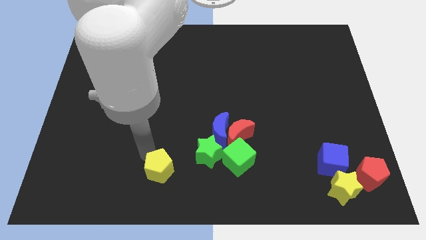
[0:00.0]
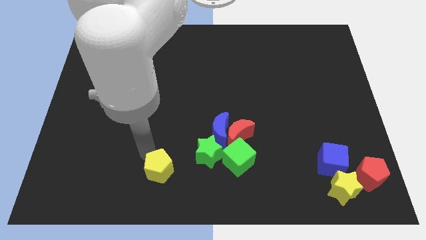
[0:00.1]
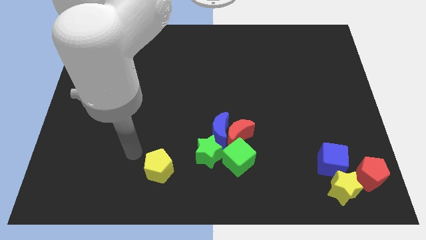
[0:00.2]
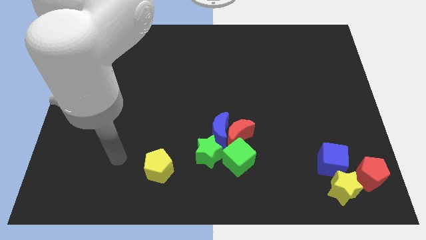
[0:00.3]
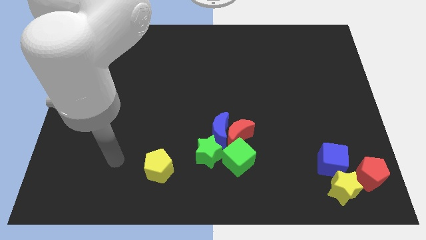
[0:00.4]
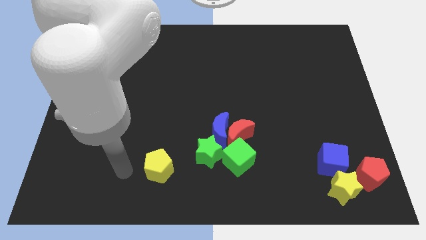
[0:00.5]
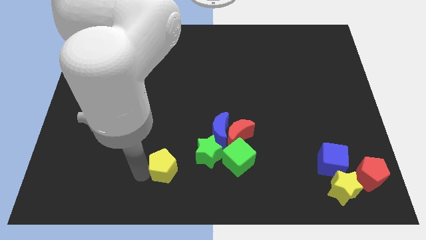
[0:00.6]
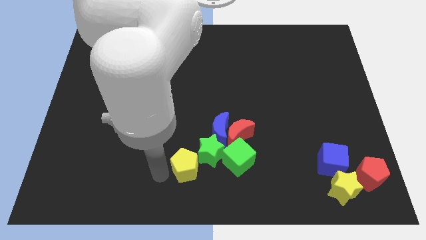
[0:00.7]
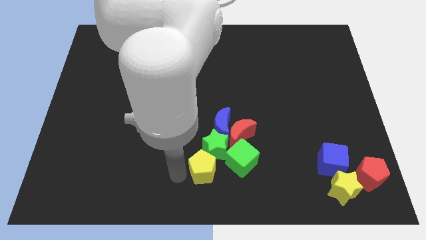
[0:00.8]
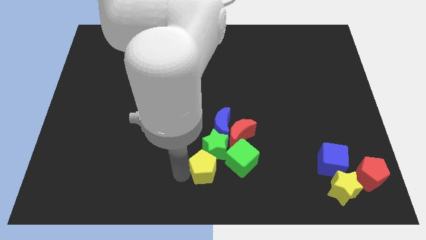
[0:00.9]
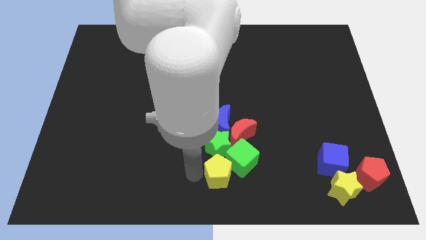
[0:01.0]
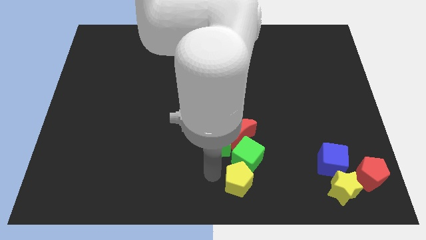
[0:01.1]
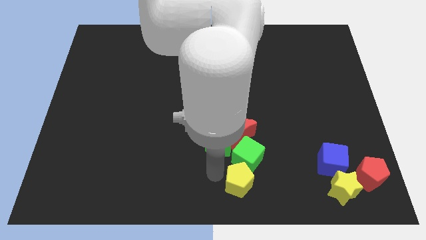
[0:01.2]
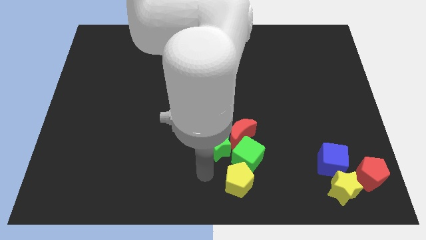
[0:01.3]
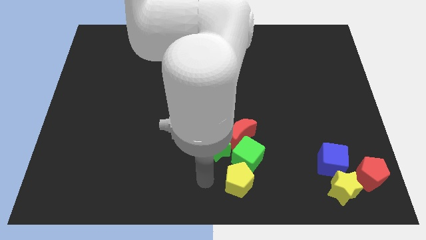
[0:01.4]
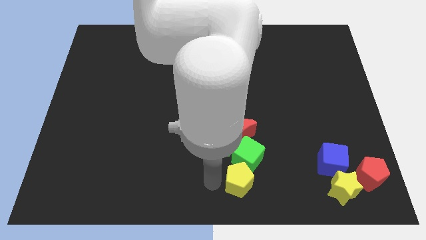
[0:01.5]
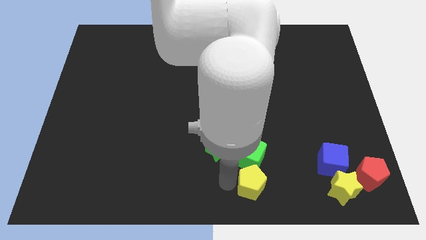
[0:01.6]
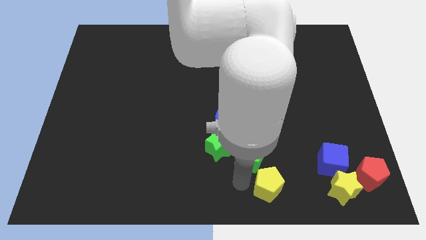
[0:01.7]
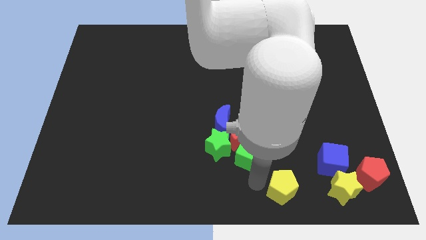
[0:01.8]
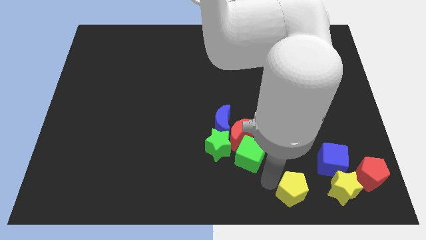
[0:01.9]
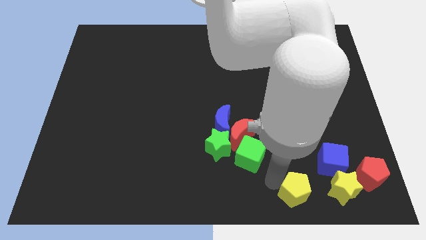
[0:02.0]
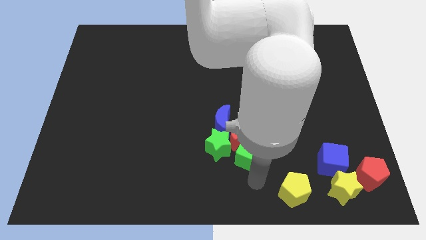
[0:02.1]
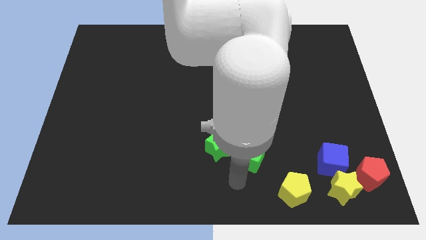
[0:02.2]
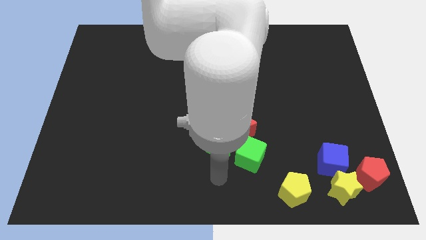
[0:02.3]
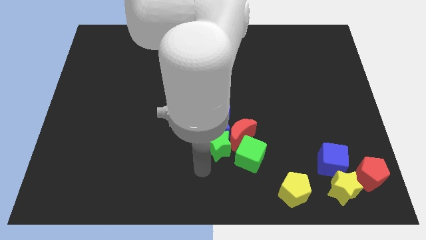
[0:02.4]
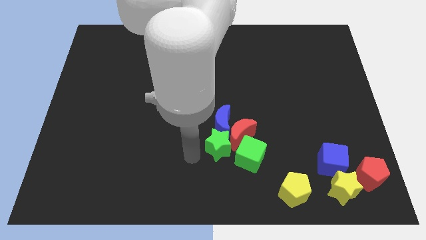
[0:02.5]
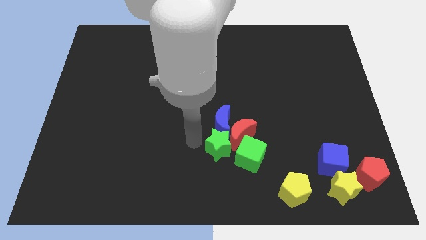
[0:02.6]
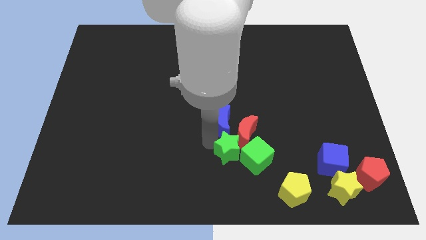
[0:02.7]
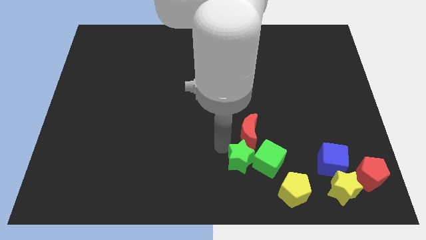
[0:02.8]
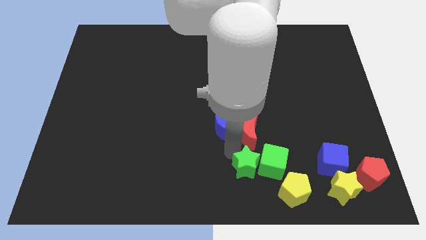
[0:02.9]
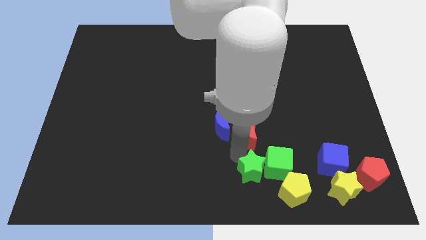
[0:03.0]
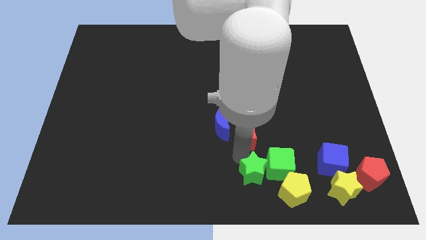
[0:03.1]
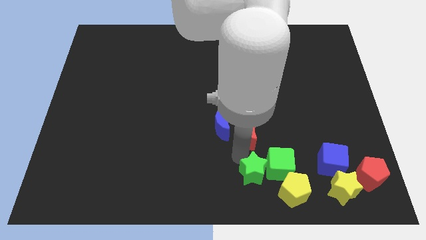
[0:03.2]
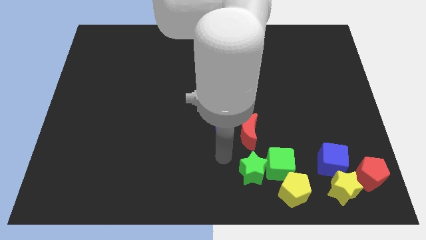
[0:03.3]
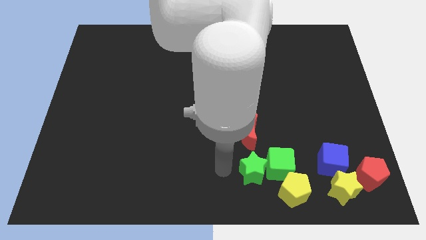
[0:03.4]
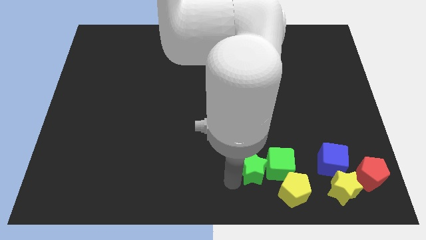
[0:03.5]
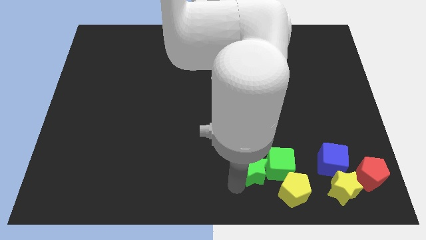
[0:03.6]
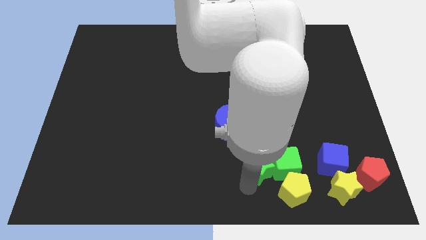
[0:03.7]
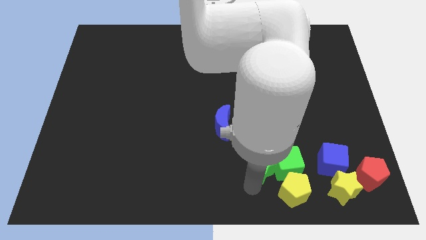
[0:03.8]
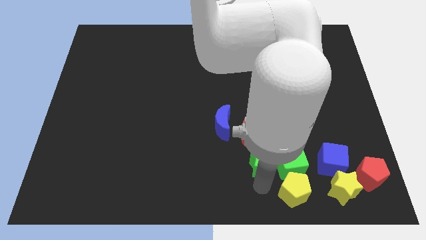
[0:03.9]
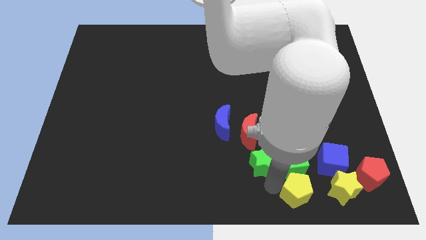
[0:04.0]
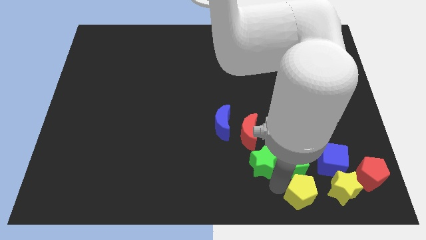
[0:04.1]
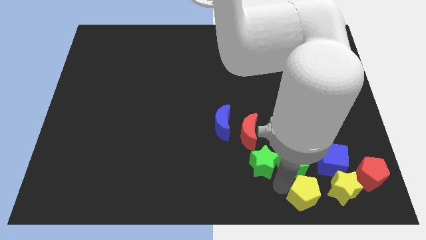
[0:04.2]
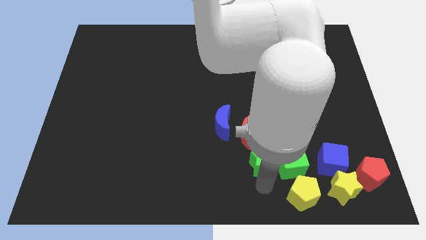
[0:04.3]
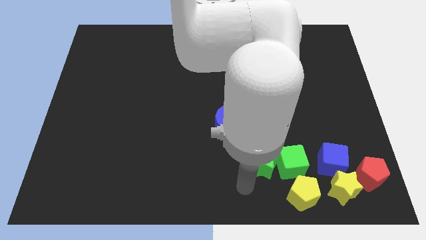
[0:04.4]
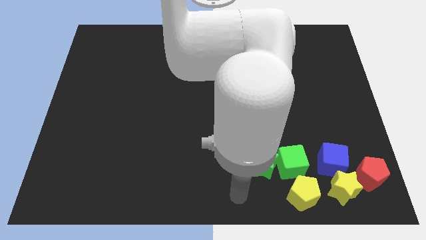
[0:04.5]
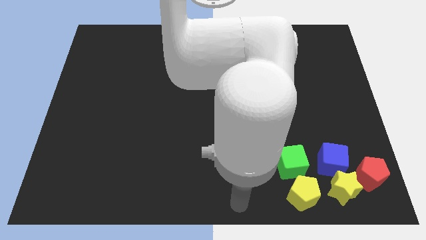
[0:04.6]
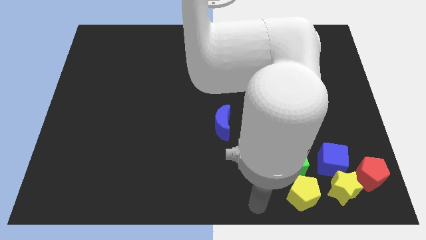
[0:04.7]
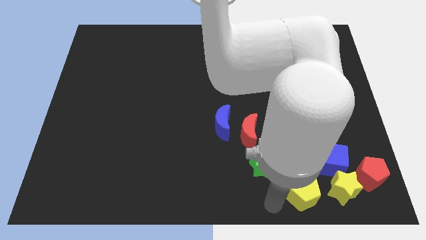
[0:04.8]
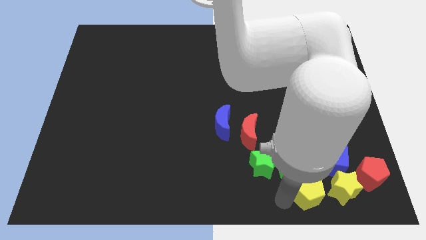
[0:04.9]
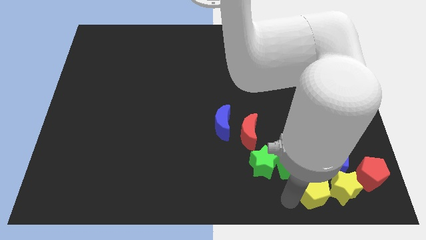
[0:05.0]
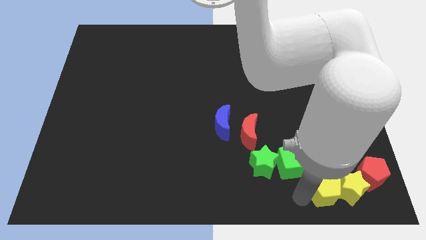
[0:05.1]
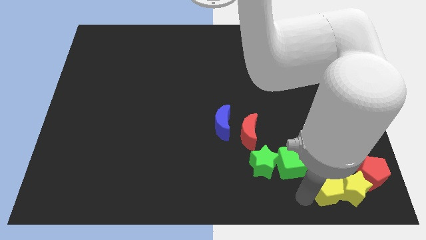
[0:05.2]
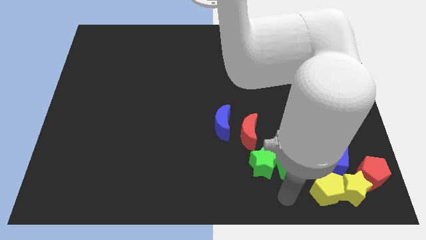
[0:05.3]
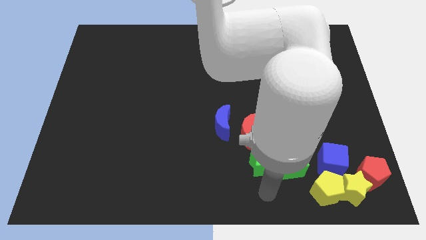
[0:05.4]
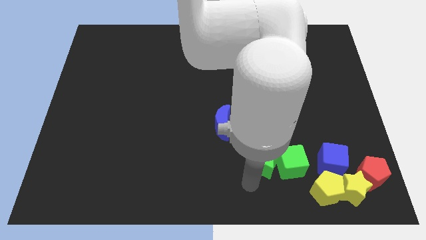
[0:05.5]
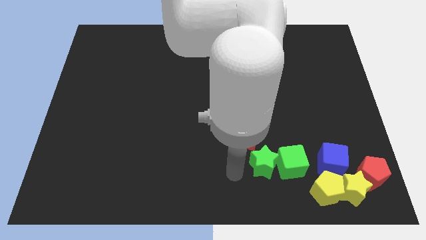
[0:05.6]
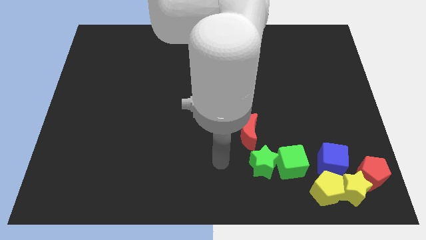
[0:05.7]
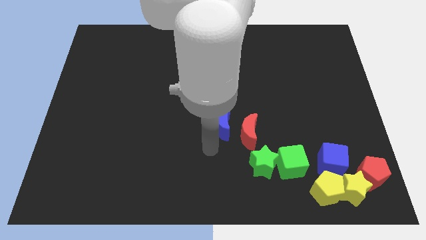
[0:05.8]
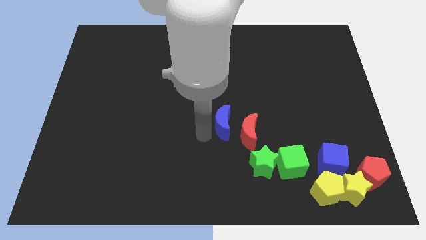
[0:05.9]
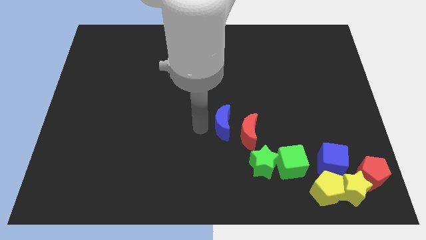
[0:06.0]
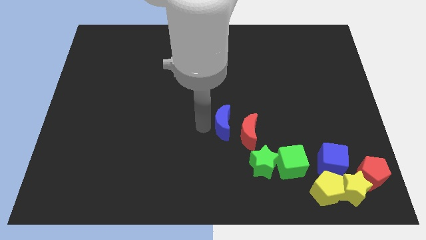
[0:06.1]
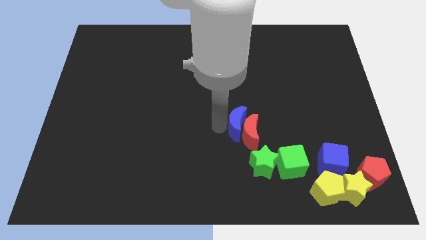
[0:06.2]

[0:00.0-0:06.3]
push the group of blocks to the right corner of the board

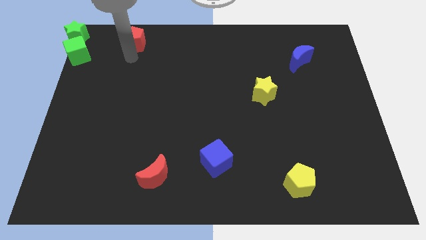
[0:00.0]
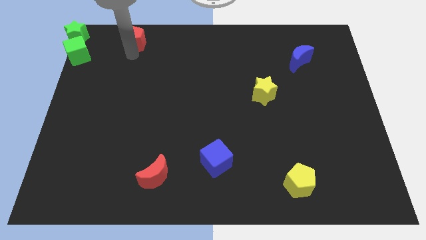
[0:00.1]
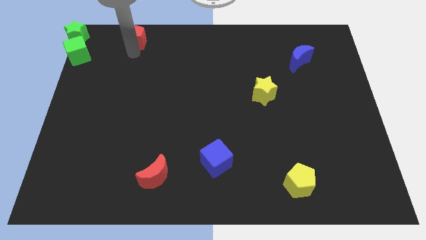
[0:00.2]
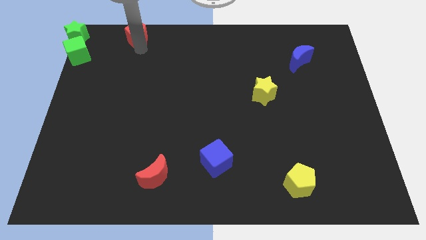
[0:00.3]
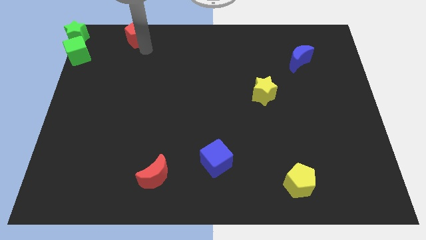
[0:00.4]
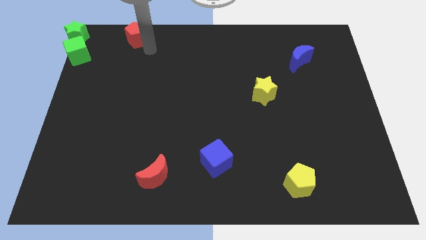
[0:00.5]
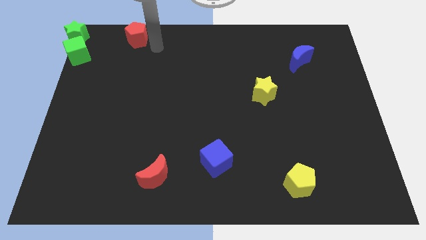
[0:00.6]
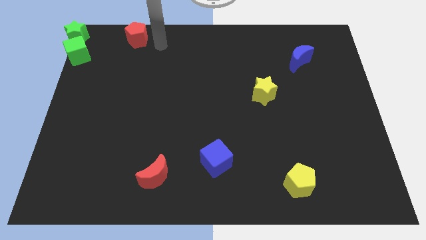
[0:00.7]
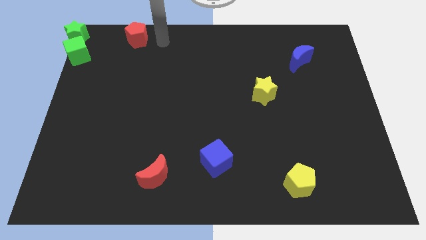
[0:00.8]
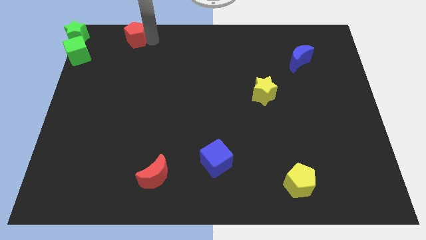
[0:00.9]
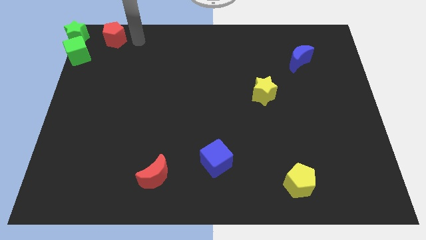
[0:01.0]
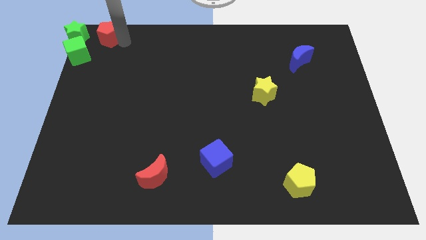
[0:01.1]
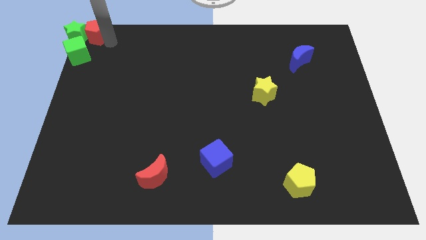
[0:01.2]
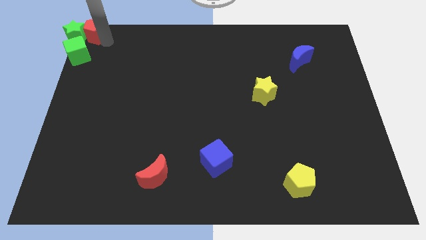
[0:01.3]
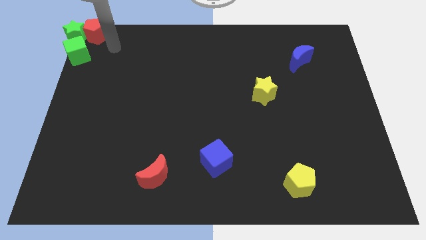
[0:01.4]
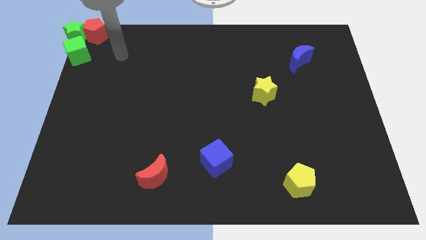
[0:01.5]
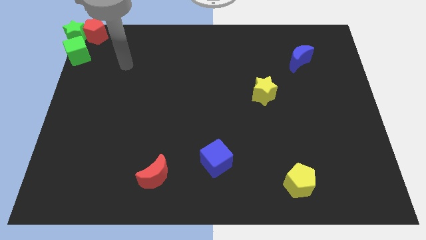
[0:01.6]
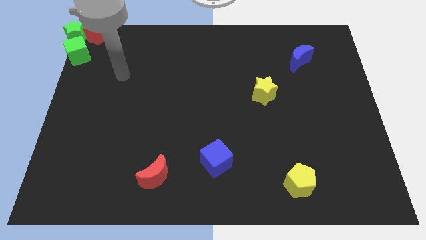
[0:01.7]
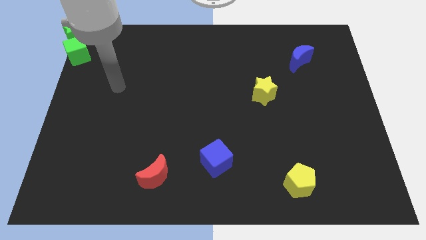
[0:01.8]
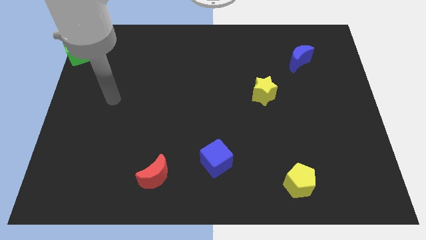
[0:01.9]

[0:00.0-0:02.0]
push the red pentagon into the green star

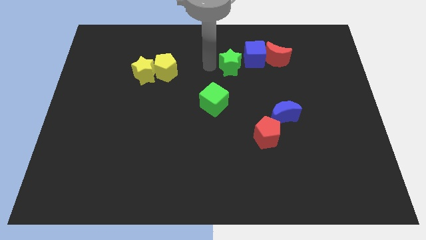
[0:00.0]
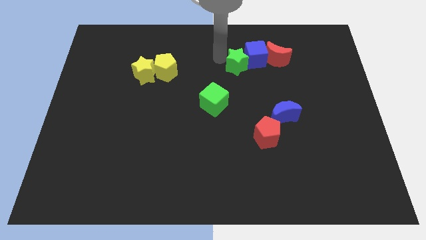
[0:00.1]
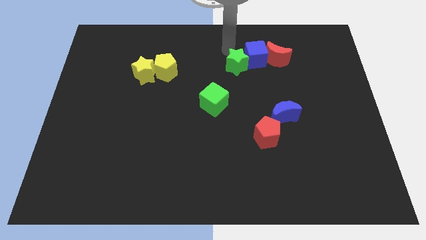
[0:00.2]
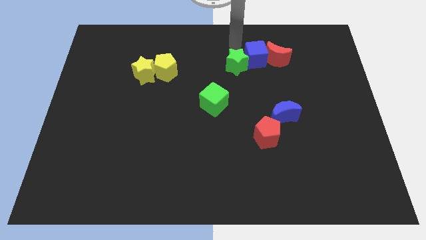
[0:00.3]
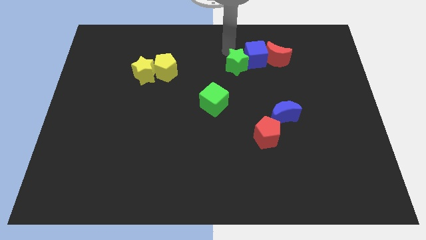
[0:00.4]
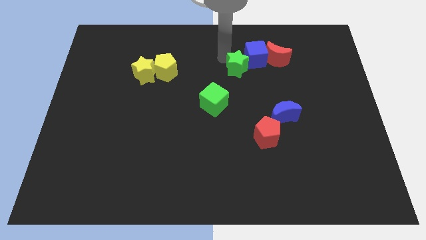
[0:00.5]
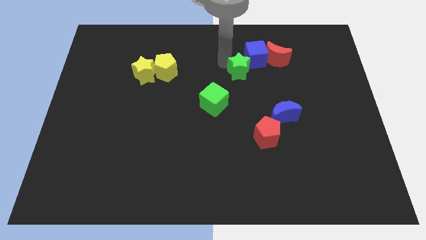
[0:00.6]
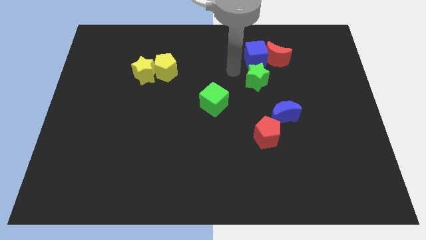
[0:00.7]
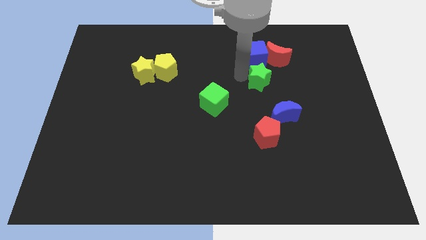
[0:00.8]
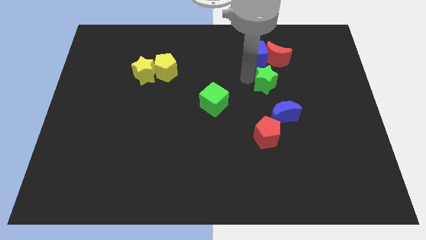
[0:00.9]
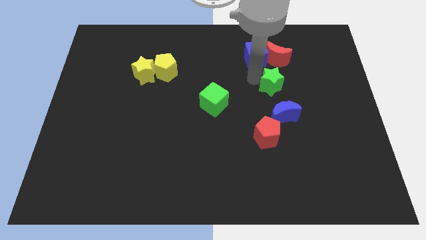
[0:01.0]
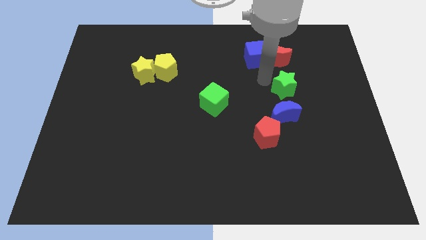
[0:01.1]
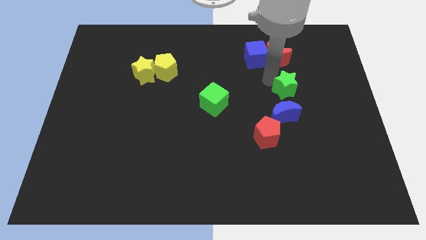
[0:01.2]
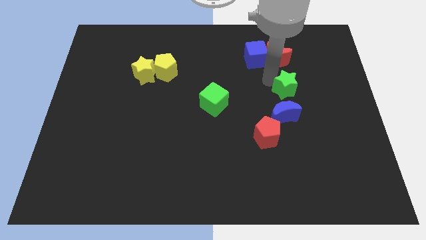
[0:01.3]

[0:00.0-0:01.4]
put the green star above the blue moon
